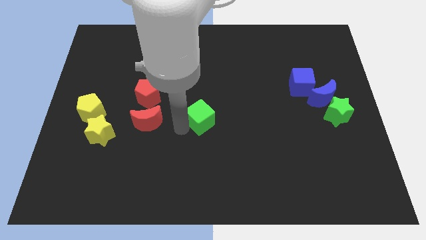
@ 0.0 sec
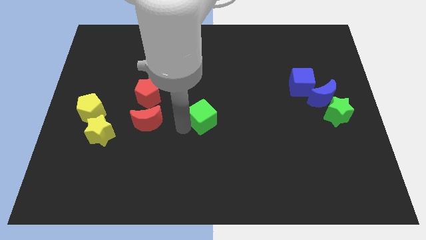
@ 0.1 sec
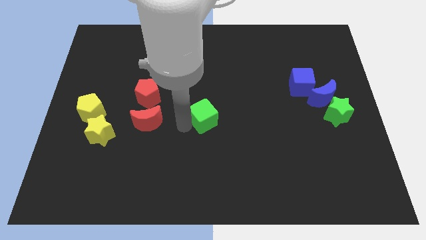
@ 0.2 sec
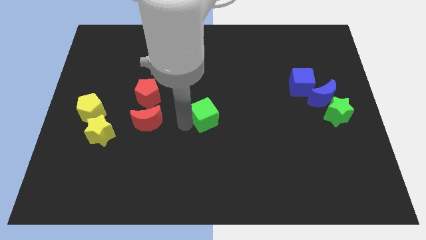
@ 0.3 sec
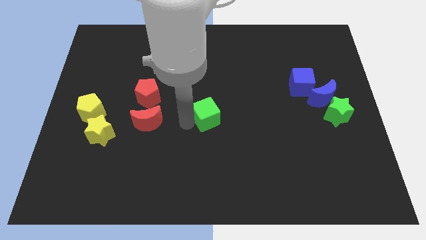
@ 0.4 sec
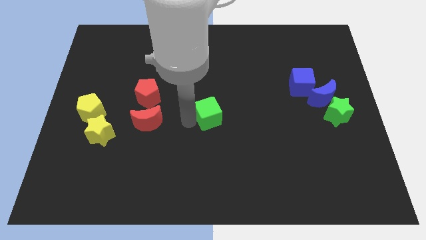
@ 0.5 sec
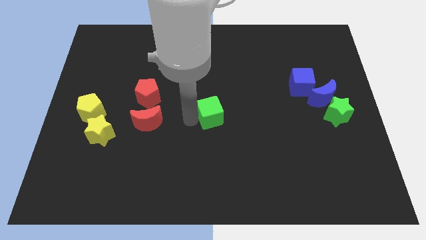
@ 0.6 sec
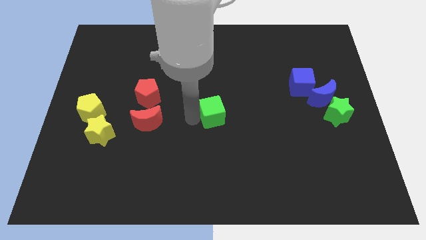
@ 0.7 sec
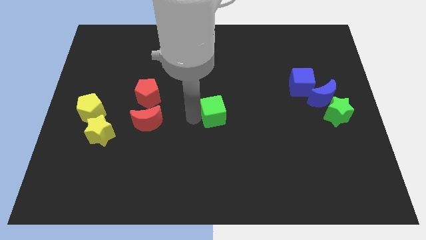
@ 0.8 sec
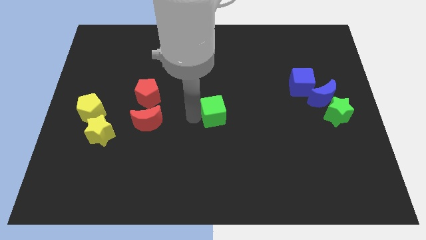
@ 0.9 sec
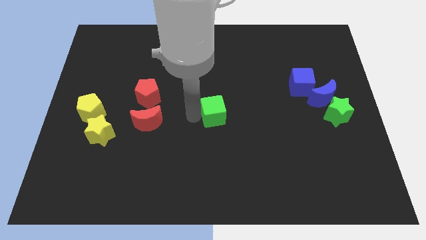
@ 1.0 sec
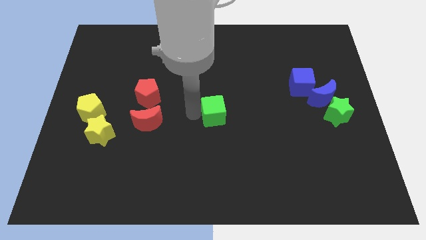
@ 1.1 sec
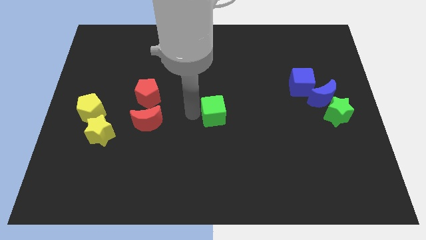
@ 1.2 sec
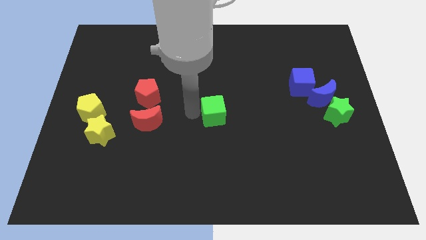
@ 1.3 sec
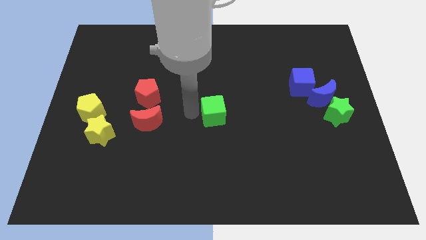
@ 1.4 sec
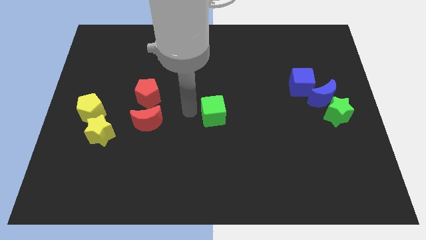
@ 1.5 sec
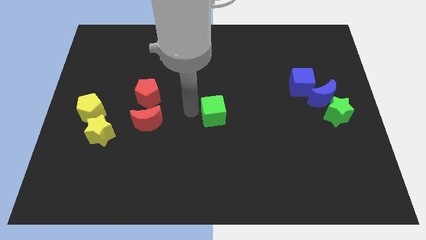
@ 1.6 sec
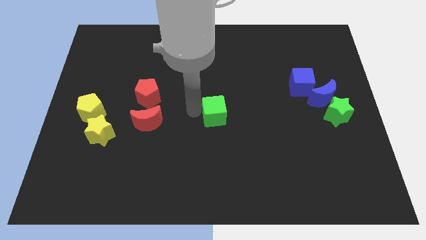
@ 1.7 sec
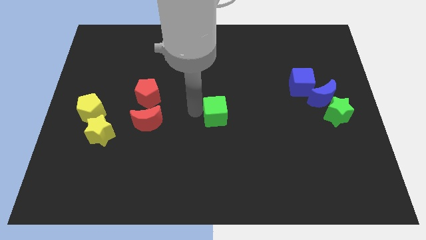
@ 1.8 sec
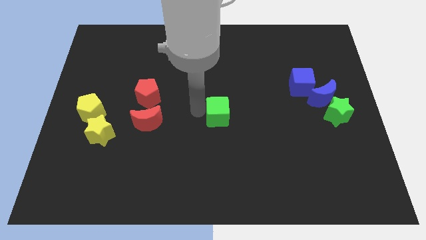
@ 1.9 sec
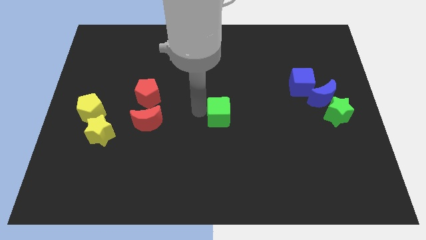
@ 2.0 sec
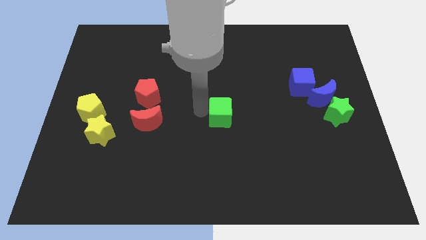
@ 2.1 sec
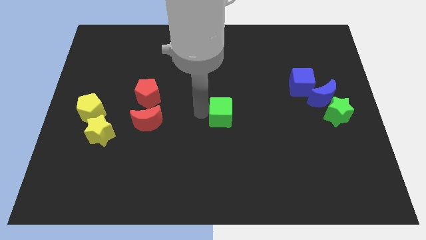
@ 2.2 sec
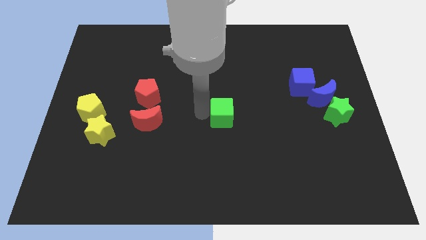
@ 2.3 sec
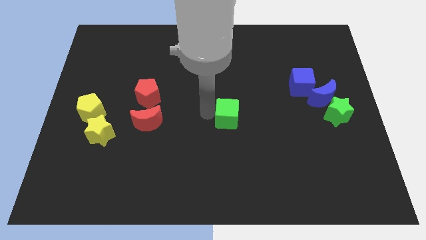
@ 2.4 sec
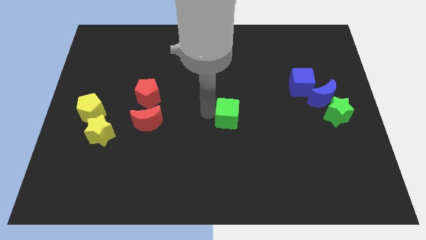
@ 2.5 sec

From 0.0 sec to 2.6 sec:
move the green square to the center of the board

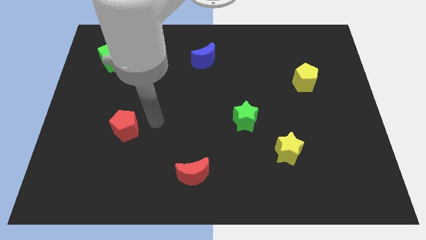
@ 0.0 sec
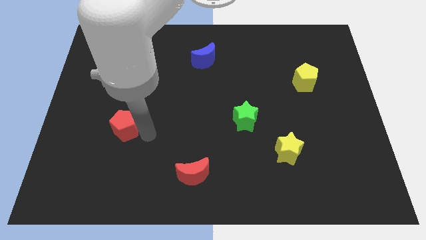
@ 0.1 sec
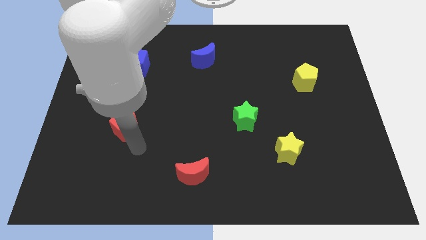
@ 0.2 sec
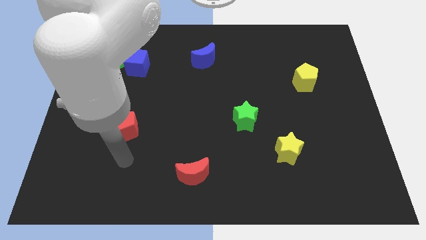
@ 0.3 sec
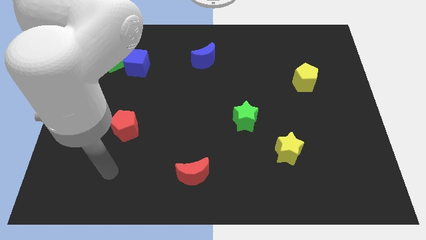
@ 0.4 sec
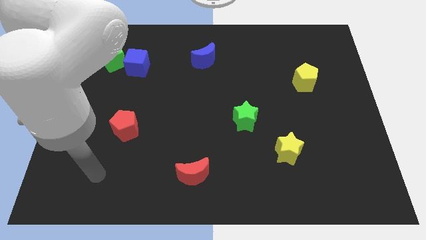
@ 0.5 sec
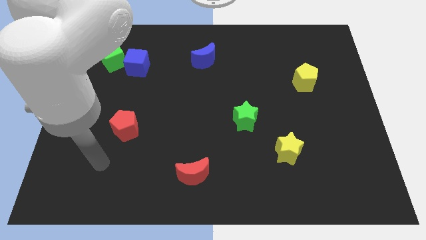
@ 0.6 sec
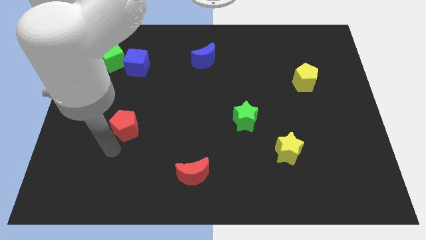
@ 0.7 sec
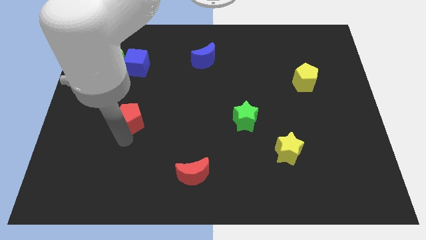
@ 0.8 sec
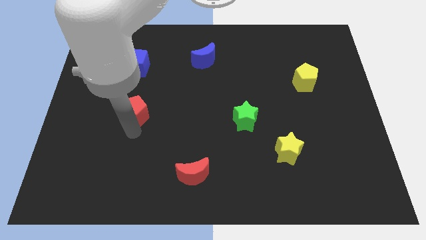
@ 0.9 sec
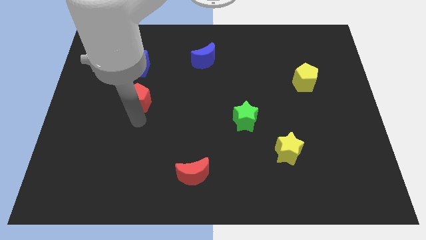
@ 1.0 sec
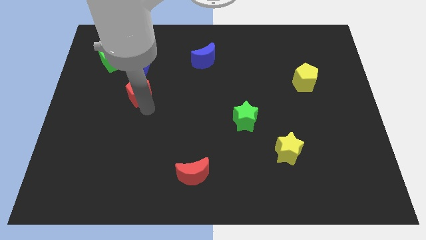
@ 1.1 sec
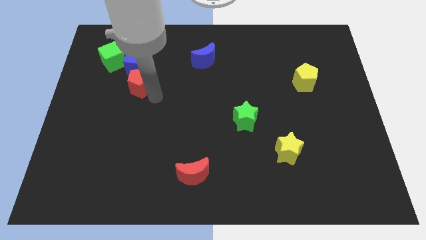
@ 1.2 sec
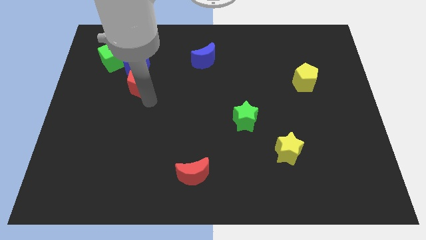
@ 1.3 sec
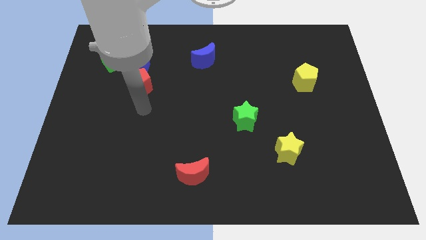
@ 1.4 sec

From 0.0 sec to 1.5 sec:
move the red pentagon below into the blue cube

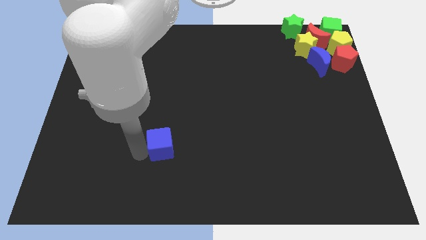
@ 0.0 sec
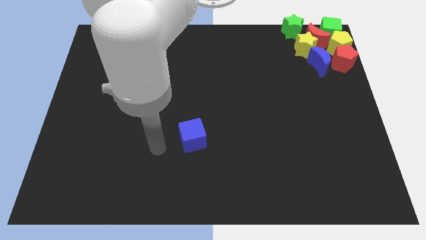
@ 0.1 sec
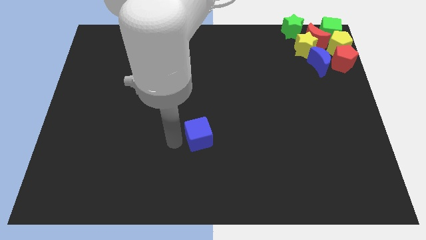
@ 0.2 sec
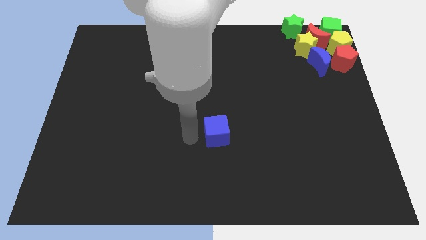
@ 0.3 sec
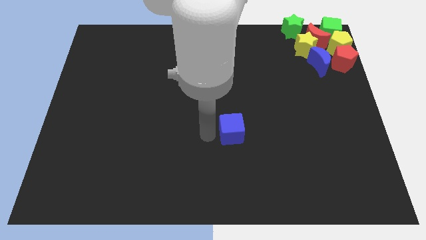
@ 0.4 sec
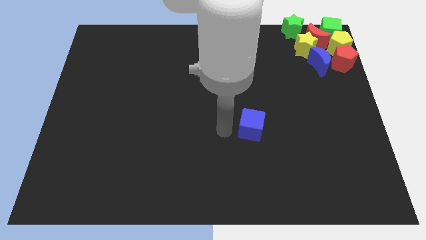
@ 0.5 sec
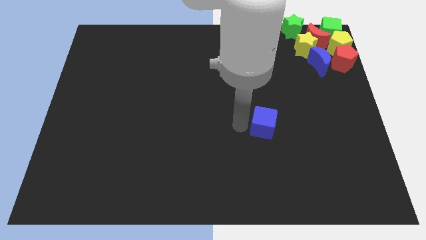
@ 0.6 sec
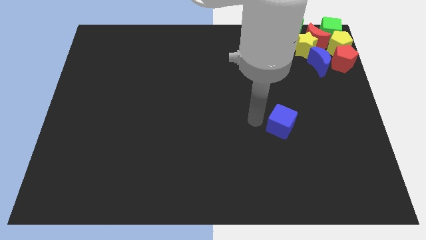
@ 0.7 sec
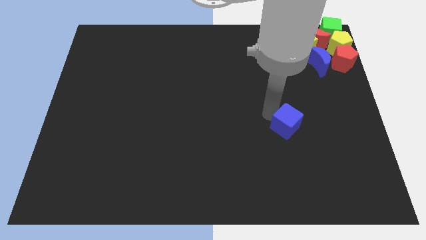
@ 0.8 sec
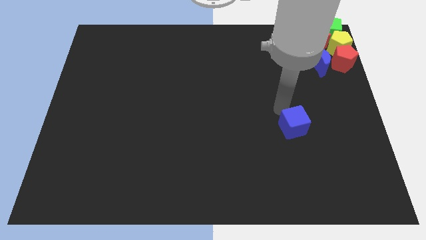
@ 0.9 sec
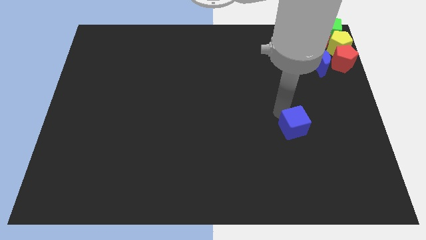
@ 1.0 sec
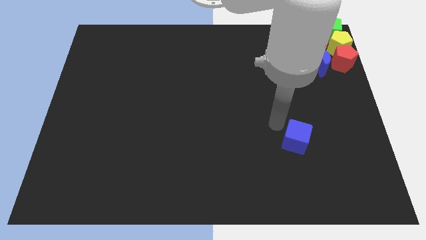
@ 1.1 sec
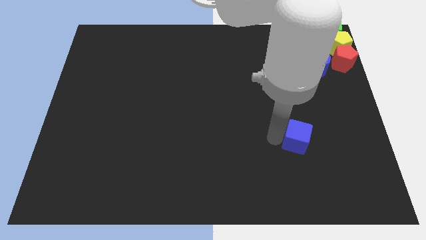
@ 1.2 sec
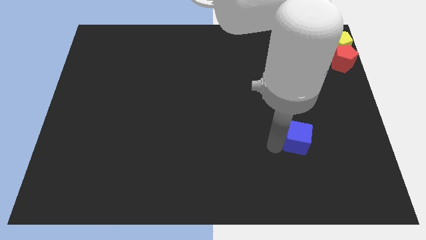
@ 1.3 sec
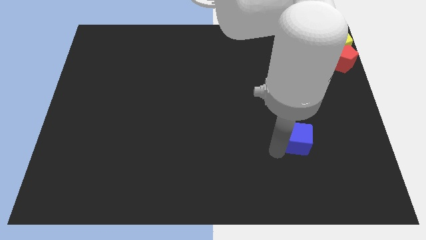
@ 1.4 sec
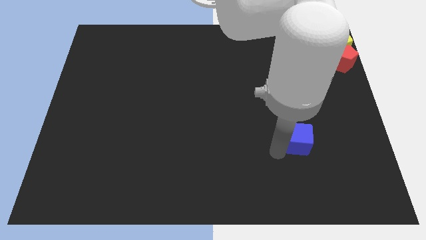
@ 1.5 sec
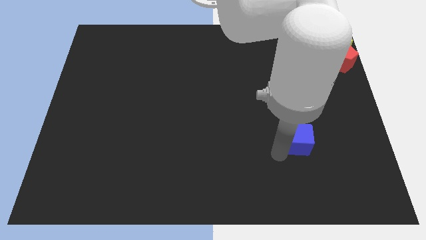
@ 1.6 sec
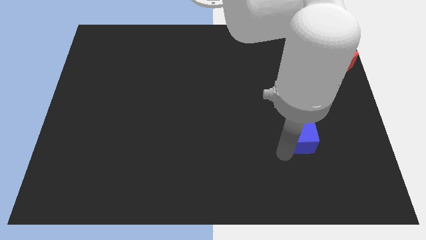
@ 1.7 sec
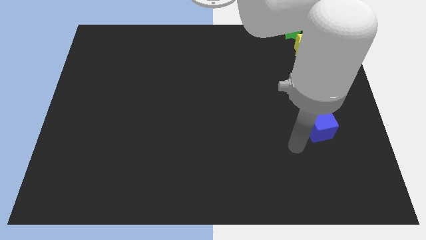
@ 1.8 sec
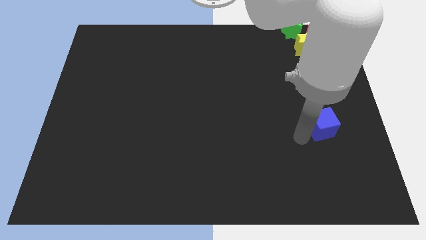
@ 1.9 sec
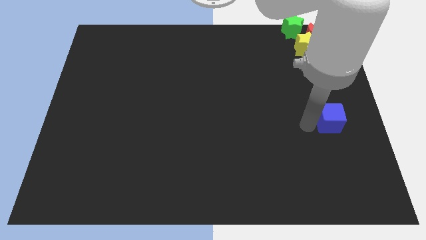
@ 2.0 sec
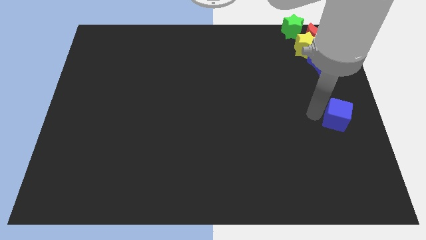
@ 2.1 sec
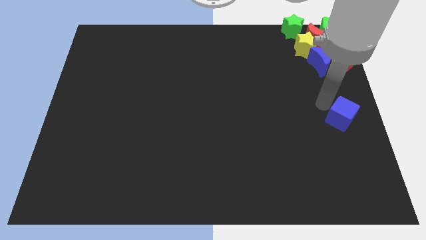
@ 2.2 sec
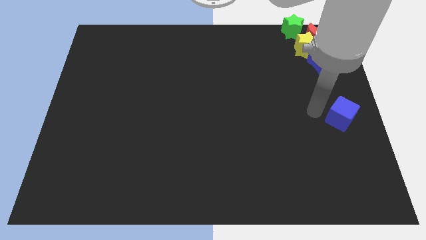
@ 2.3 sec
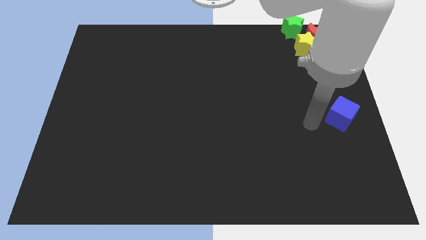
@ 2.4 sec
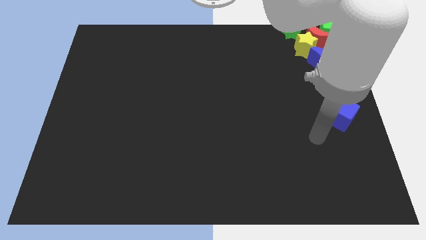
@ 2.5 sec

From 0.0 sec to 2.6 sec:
move the blue cube underneath the group of blocks

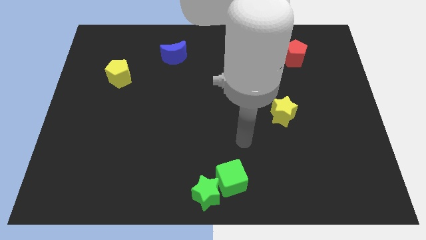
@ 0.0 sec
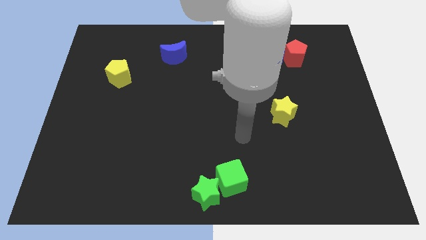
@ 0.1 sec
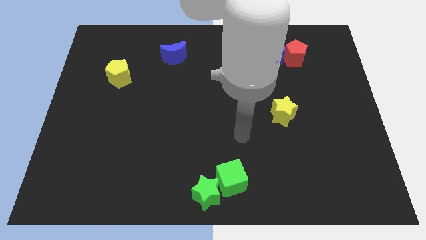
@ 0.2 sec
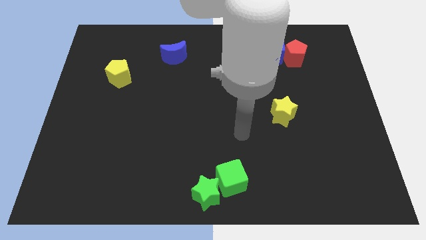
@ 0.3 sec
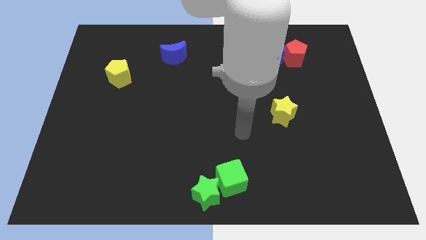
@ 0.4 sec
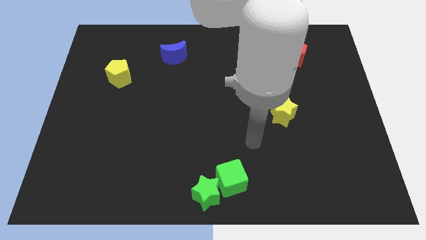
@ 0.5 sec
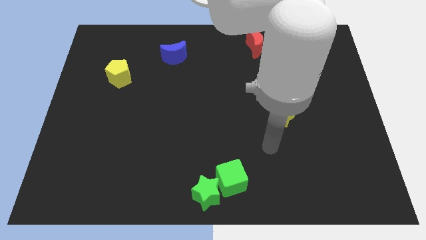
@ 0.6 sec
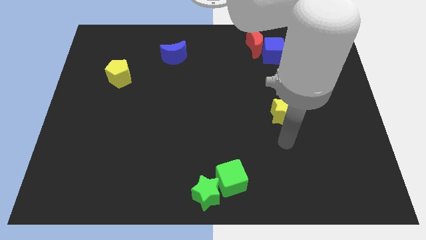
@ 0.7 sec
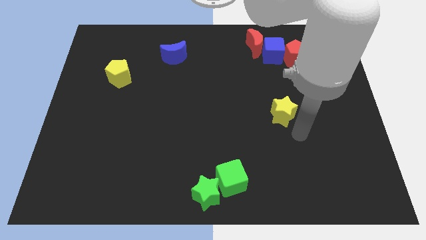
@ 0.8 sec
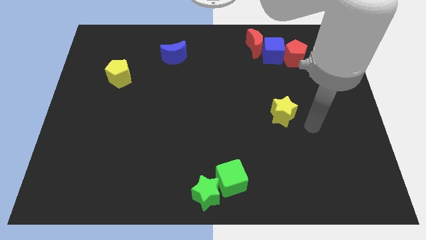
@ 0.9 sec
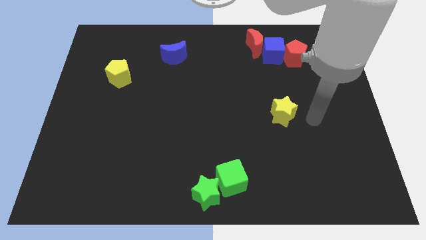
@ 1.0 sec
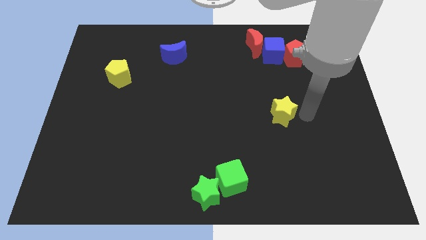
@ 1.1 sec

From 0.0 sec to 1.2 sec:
point your arm to the right side of the yellow star

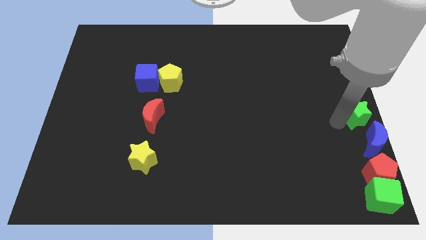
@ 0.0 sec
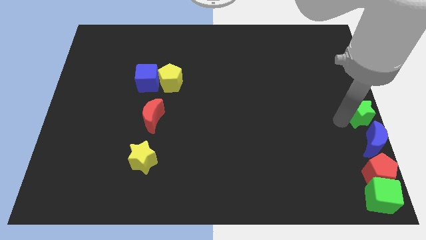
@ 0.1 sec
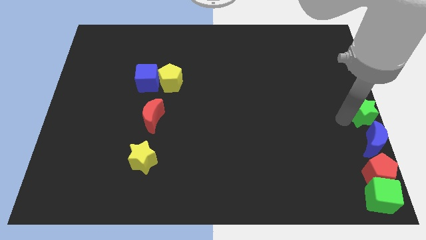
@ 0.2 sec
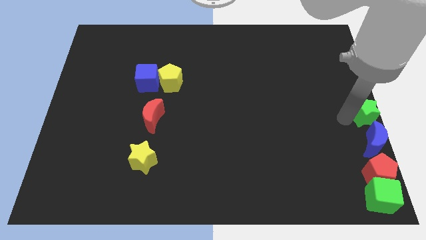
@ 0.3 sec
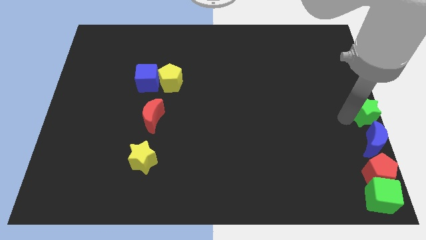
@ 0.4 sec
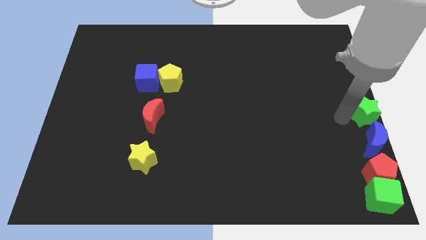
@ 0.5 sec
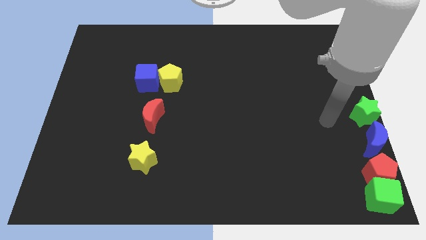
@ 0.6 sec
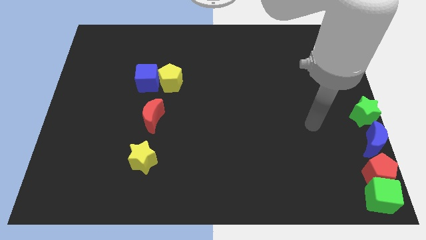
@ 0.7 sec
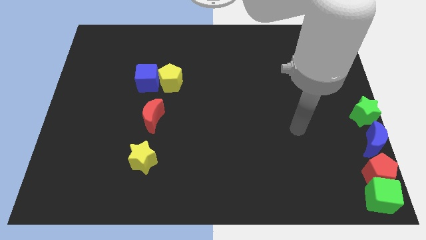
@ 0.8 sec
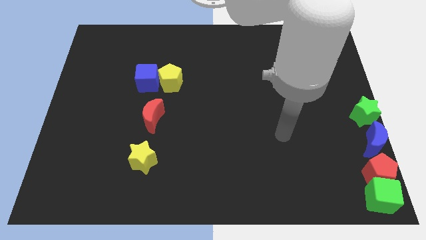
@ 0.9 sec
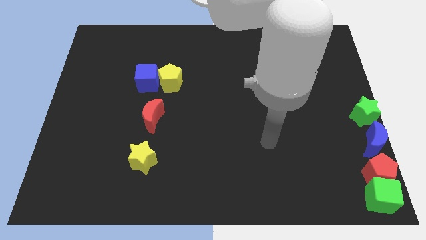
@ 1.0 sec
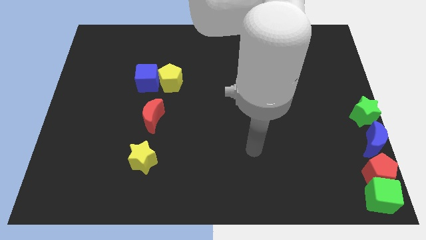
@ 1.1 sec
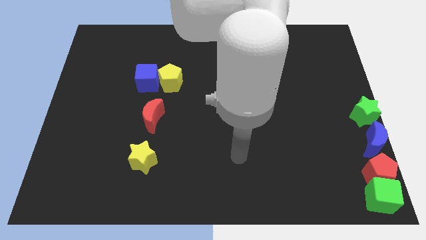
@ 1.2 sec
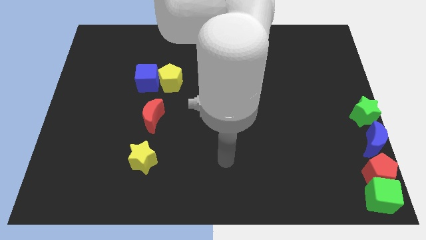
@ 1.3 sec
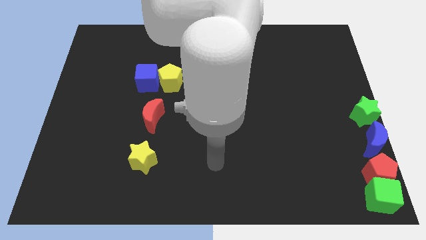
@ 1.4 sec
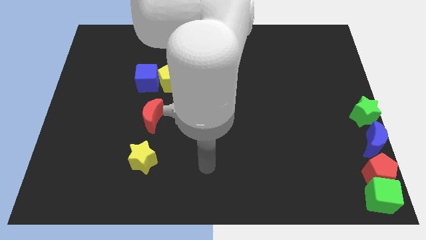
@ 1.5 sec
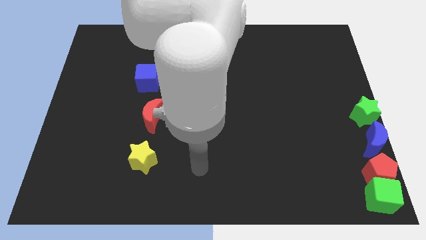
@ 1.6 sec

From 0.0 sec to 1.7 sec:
place the green star at the top of the blue moon
